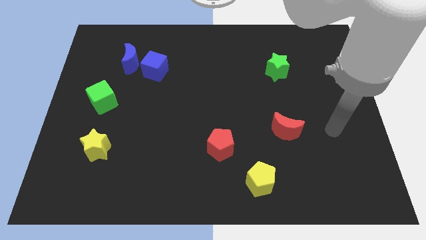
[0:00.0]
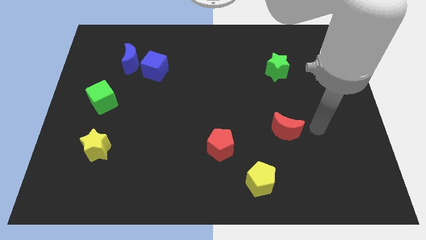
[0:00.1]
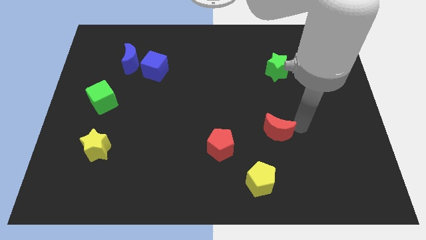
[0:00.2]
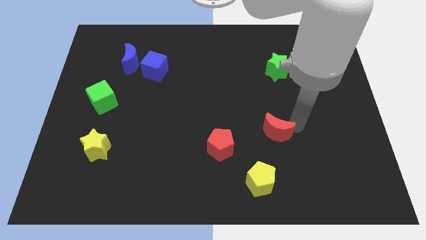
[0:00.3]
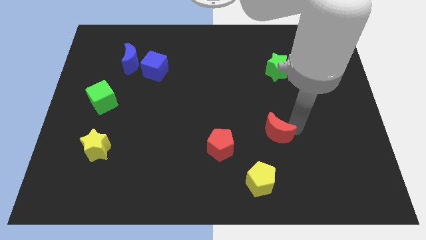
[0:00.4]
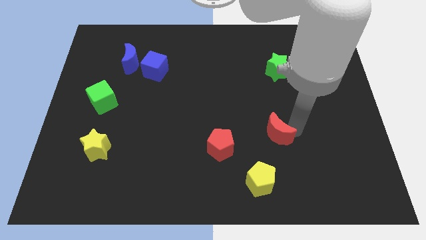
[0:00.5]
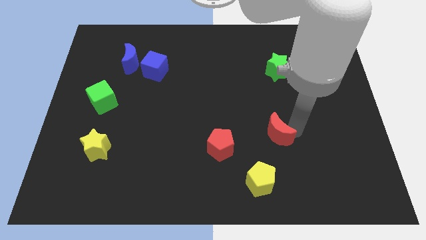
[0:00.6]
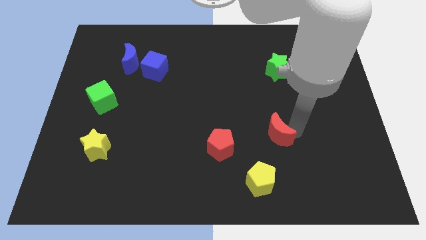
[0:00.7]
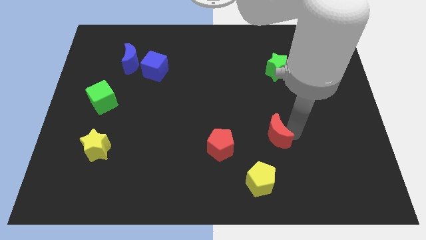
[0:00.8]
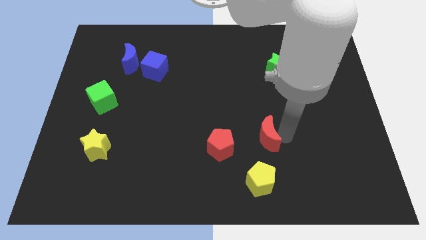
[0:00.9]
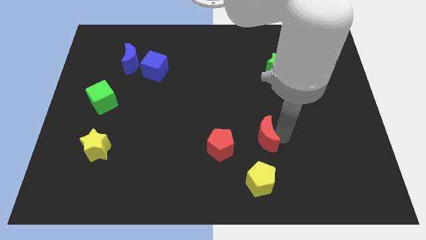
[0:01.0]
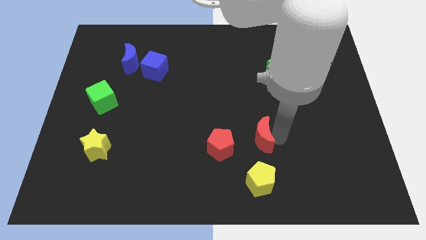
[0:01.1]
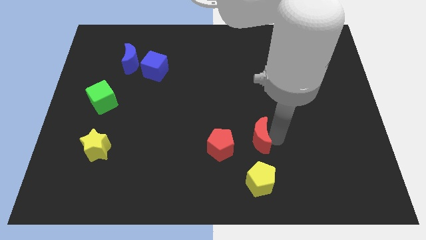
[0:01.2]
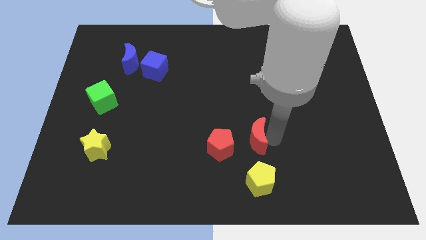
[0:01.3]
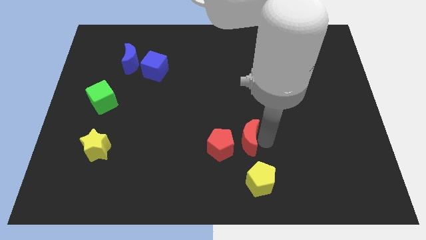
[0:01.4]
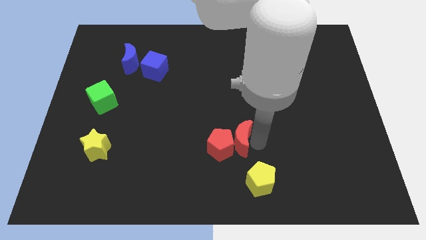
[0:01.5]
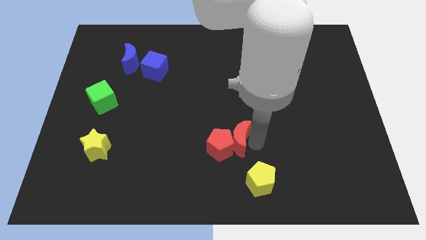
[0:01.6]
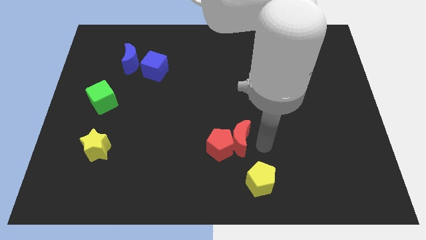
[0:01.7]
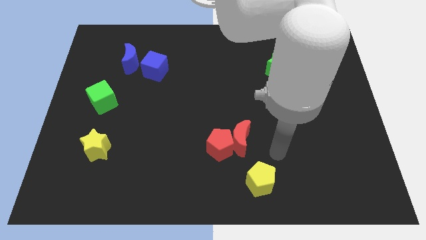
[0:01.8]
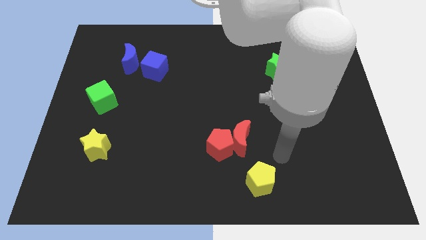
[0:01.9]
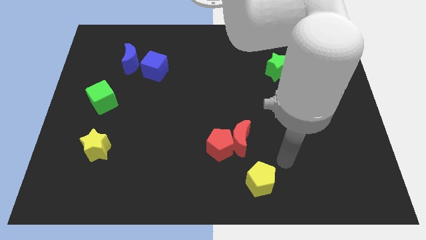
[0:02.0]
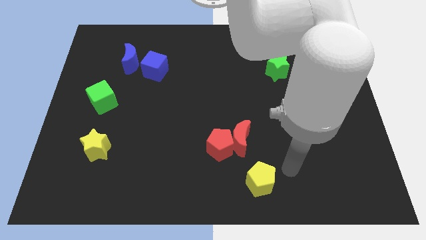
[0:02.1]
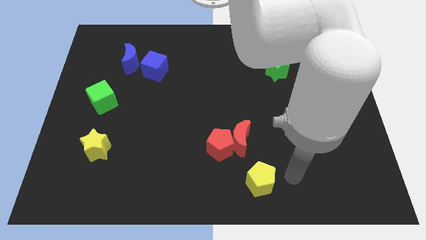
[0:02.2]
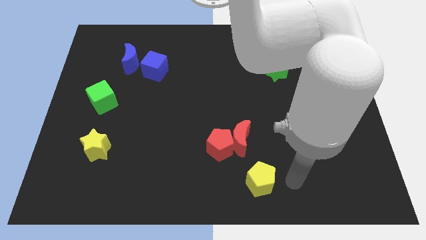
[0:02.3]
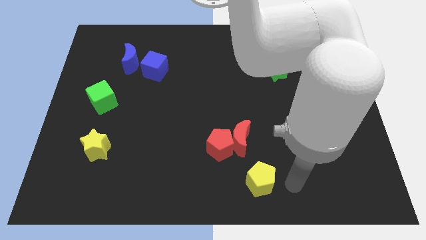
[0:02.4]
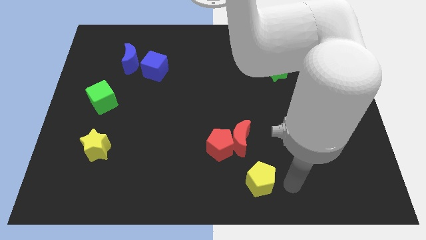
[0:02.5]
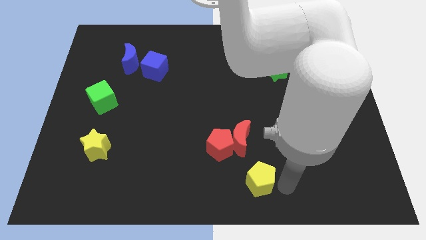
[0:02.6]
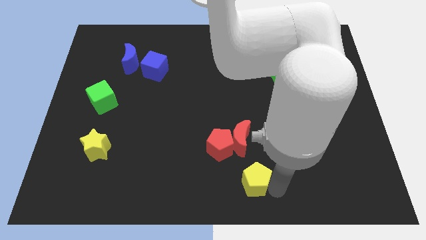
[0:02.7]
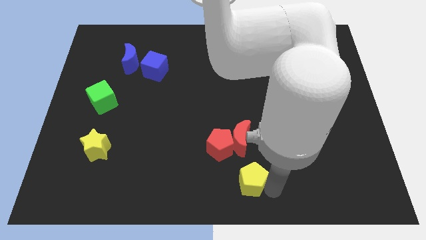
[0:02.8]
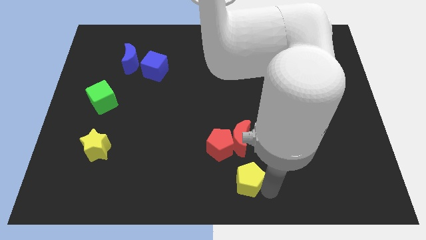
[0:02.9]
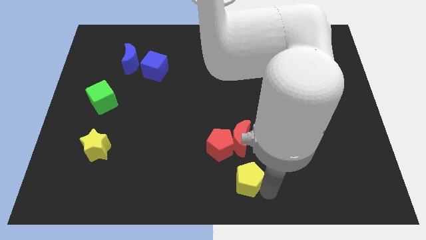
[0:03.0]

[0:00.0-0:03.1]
push the red crescent into the red pentagon

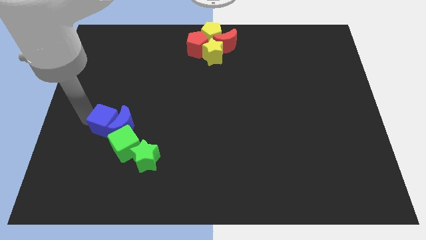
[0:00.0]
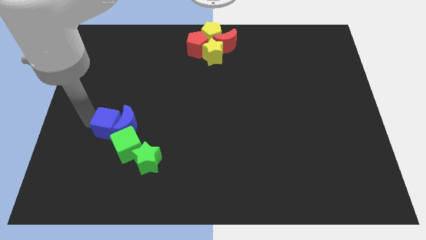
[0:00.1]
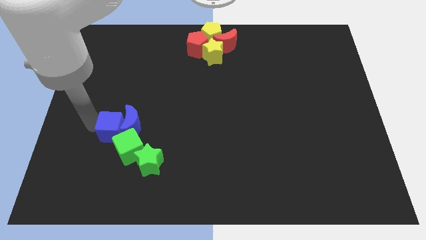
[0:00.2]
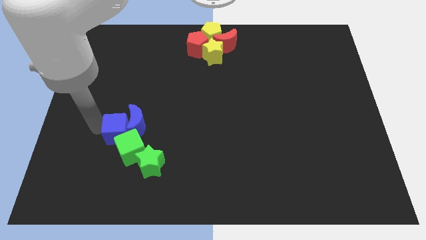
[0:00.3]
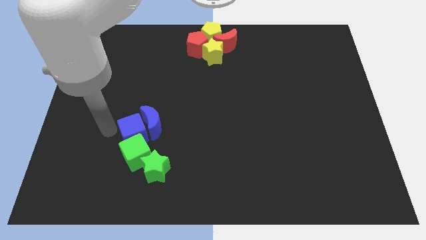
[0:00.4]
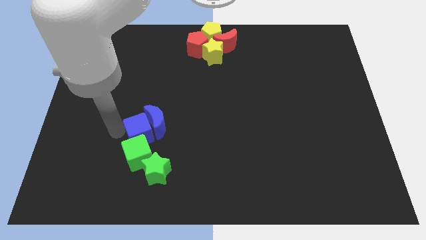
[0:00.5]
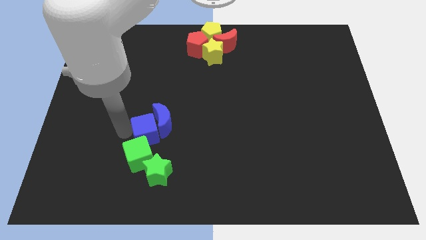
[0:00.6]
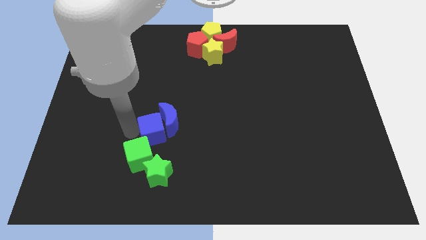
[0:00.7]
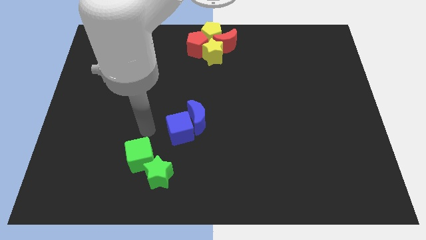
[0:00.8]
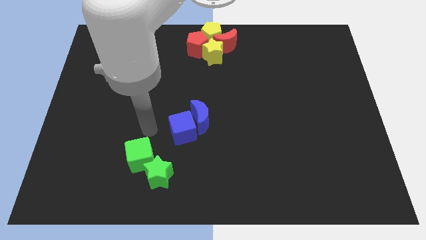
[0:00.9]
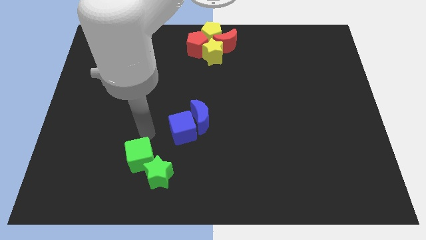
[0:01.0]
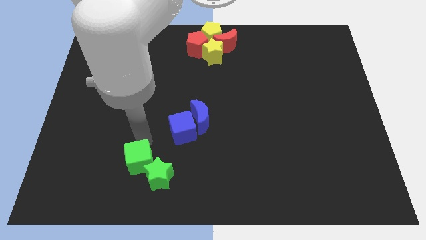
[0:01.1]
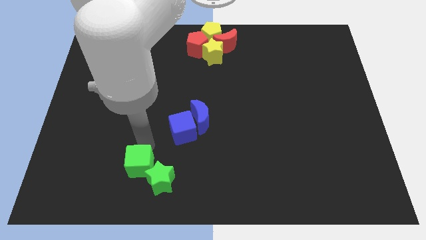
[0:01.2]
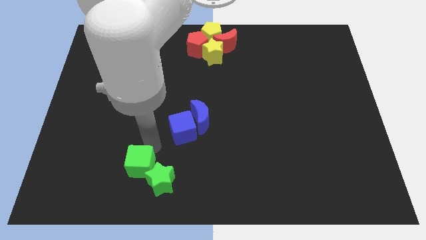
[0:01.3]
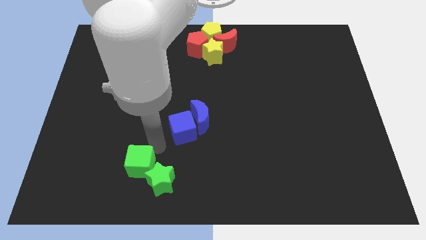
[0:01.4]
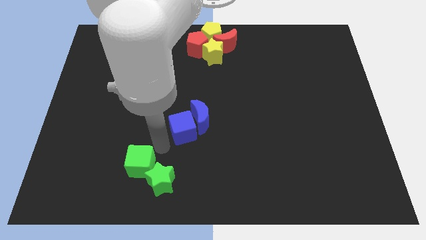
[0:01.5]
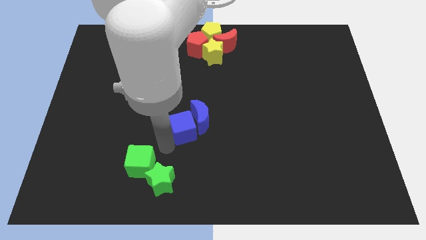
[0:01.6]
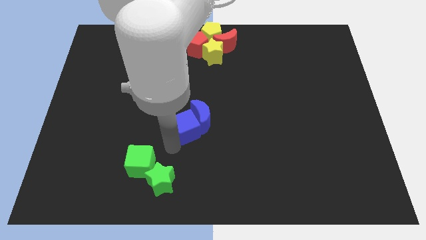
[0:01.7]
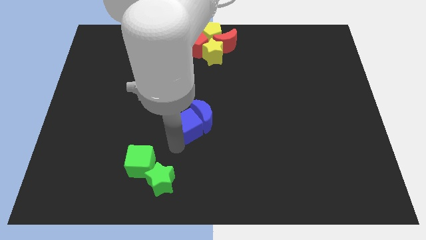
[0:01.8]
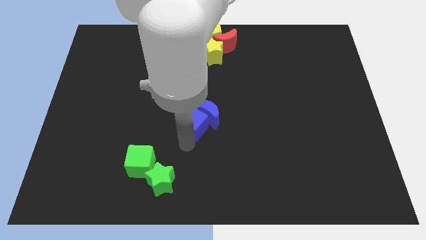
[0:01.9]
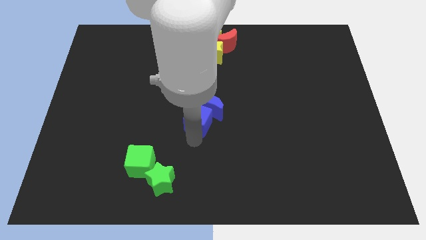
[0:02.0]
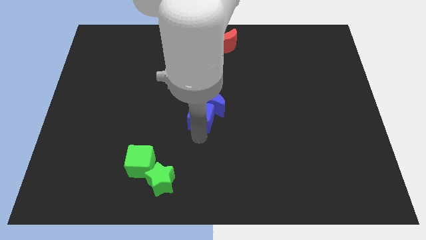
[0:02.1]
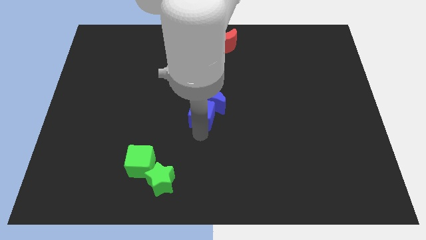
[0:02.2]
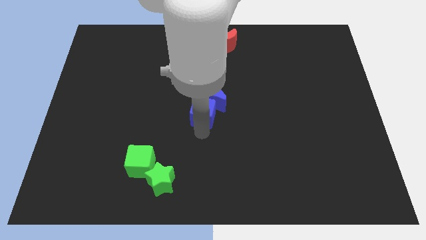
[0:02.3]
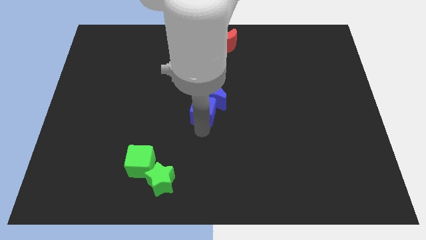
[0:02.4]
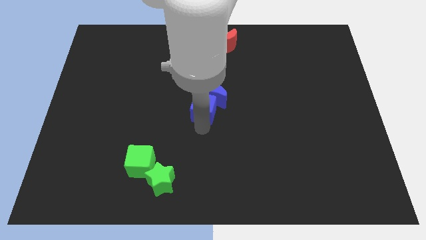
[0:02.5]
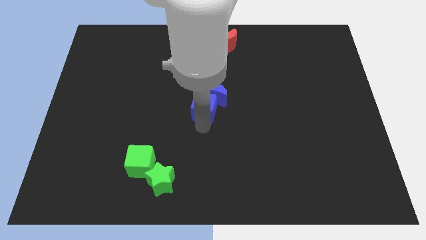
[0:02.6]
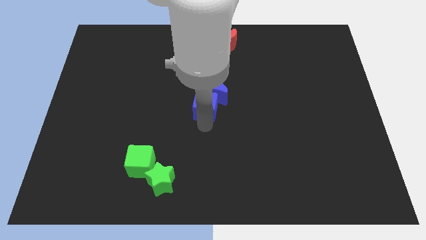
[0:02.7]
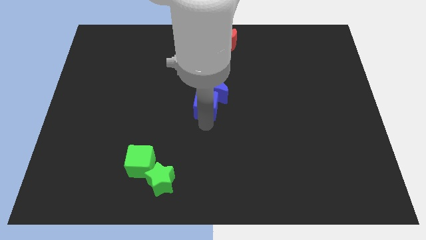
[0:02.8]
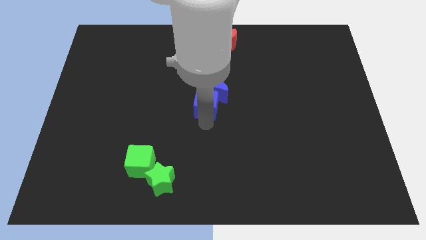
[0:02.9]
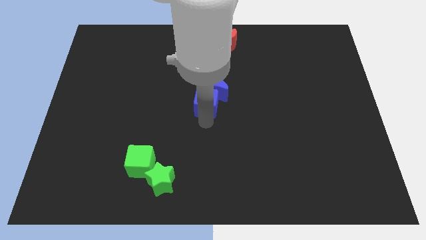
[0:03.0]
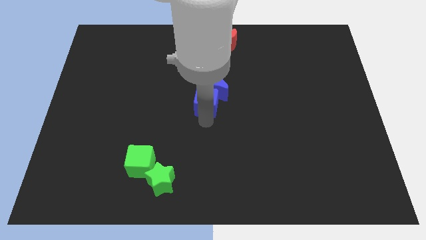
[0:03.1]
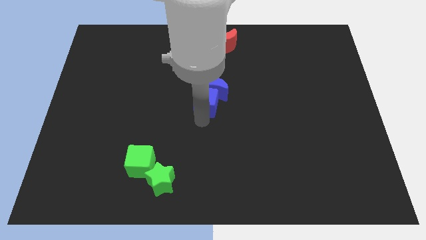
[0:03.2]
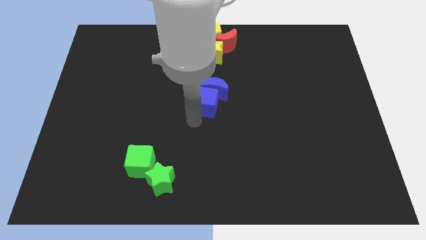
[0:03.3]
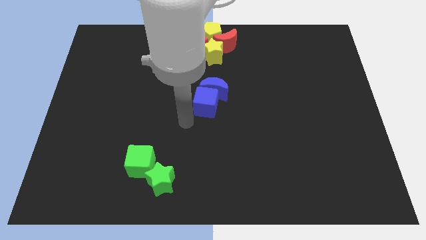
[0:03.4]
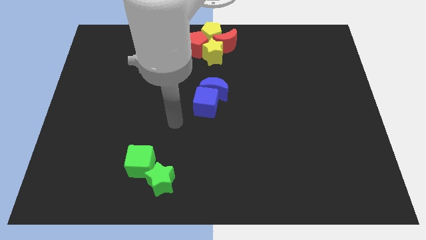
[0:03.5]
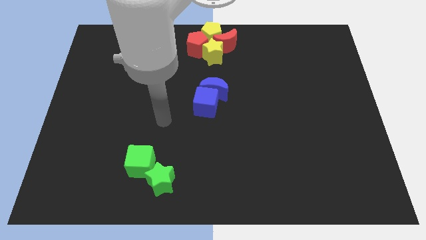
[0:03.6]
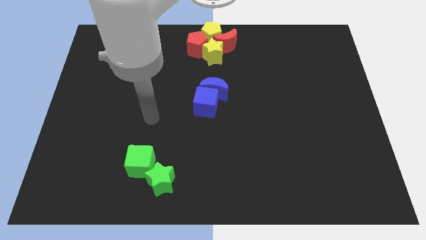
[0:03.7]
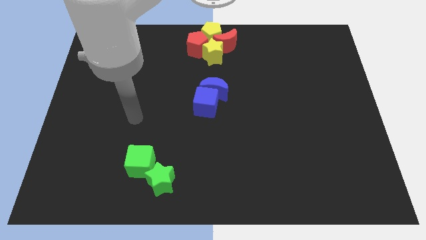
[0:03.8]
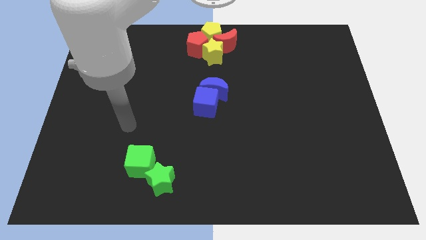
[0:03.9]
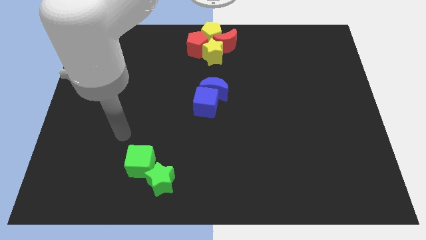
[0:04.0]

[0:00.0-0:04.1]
separate blue and green blocks

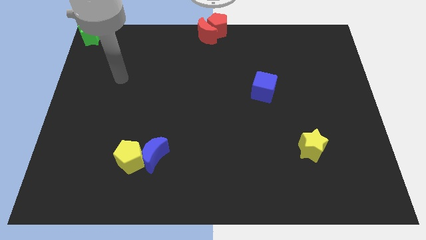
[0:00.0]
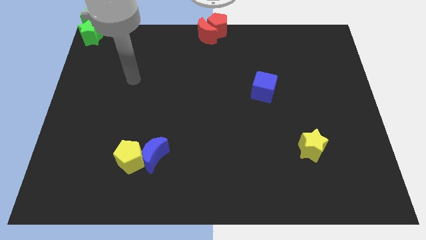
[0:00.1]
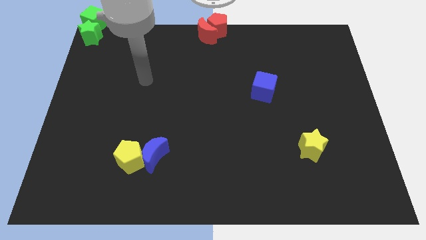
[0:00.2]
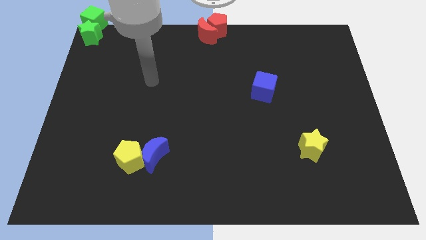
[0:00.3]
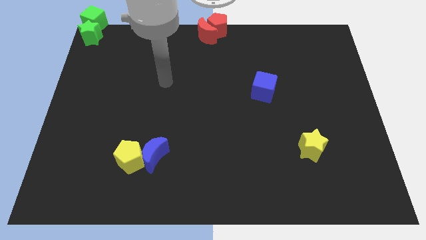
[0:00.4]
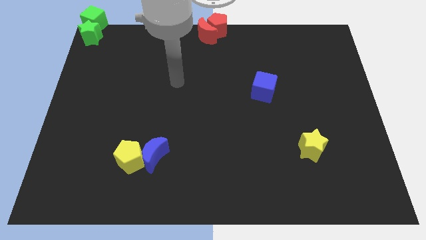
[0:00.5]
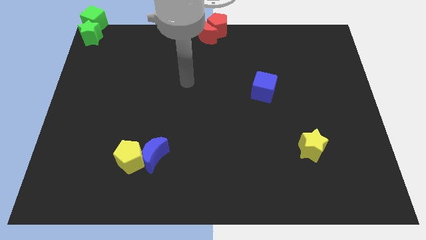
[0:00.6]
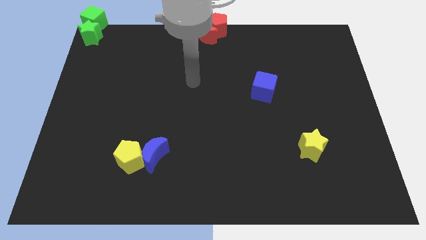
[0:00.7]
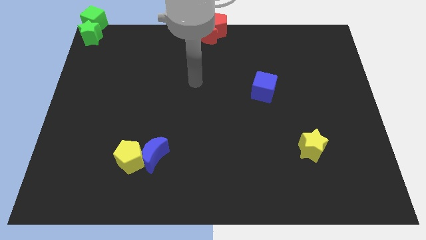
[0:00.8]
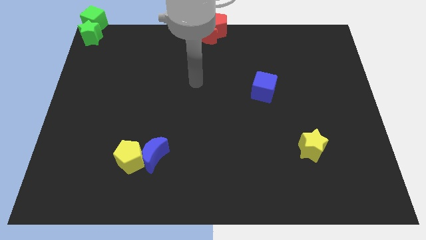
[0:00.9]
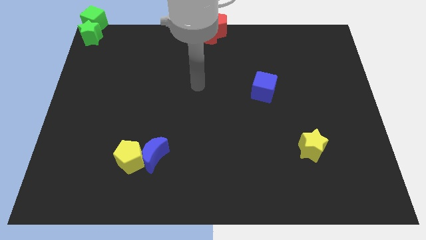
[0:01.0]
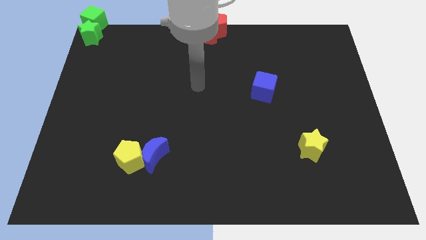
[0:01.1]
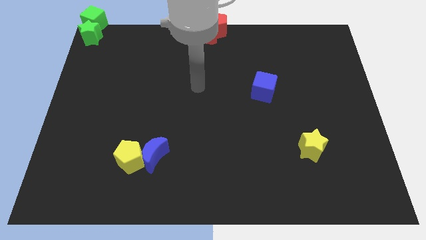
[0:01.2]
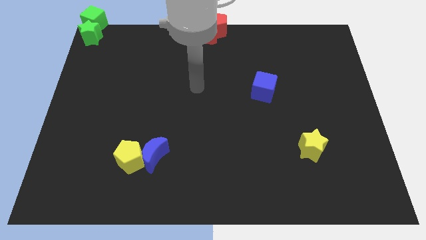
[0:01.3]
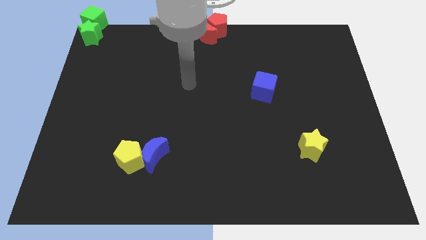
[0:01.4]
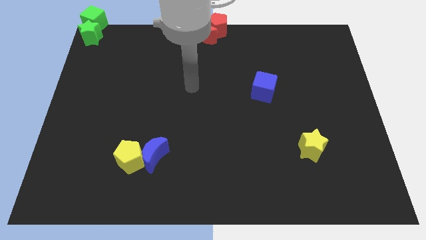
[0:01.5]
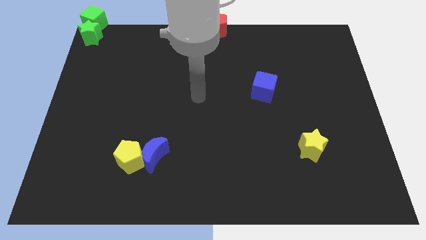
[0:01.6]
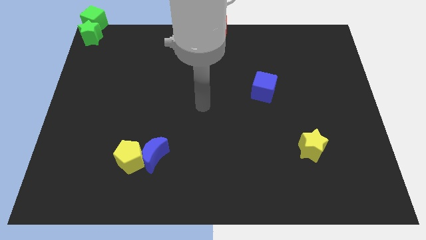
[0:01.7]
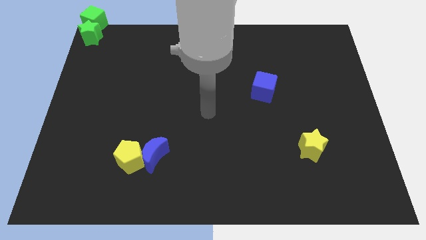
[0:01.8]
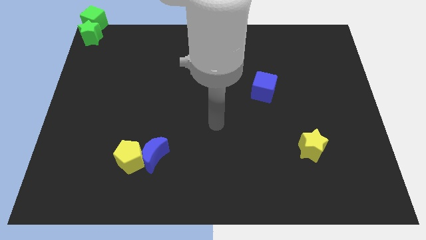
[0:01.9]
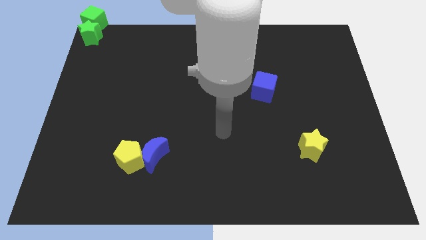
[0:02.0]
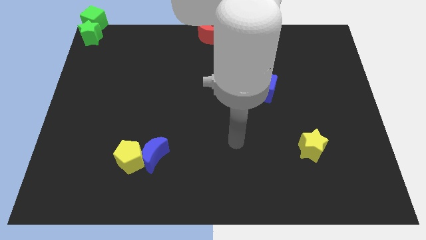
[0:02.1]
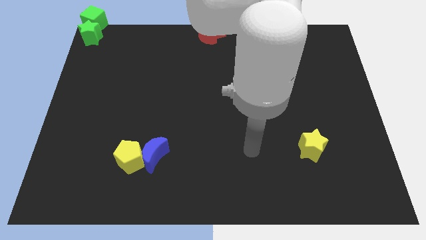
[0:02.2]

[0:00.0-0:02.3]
point the arm to the left of the yellow star
